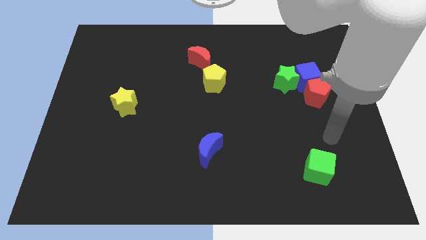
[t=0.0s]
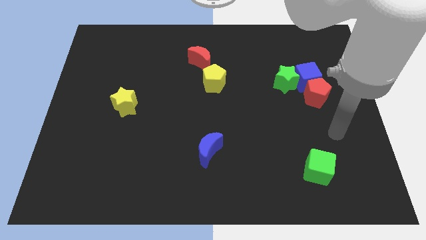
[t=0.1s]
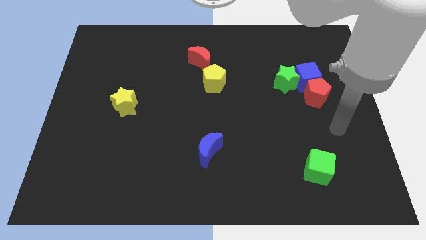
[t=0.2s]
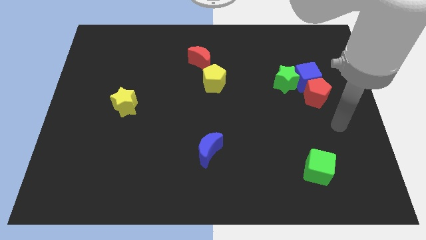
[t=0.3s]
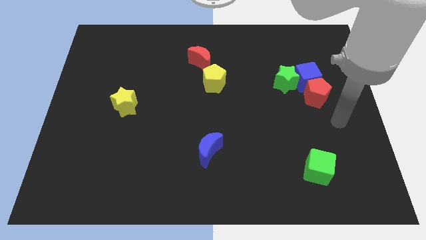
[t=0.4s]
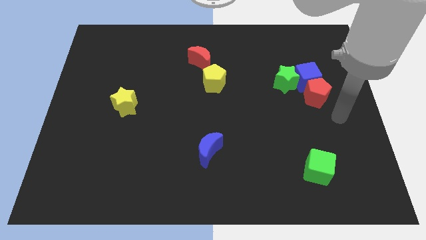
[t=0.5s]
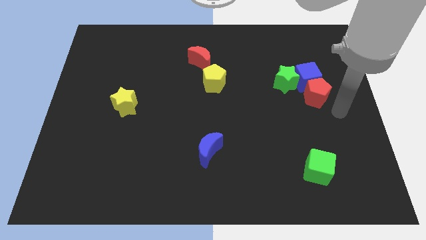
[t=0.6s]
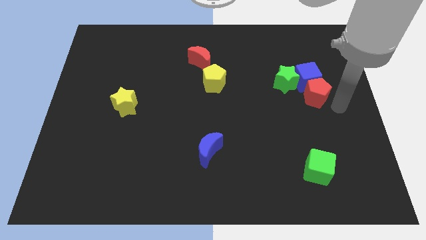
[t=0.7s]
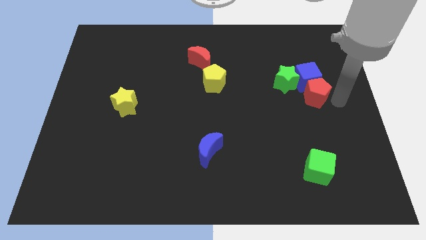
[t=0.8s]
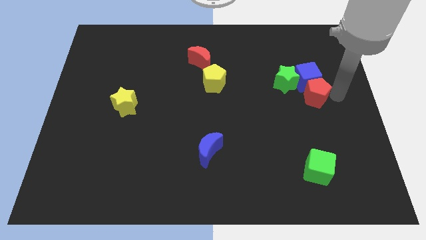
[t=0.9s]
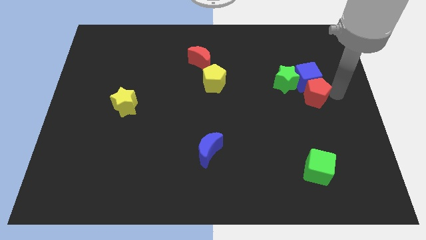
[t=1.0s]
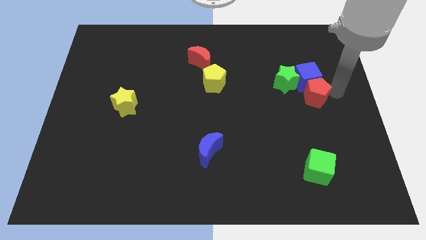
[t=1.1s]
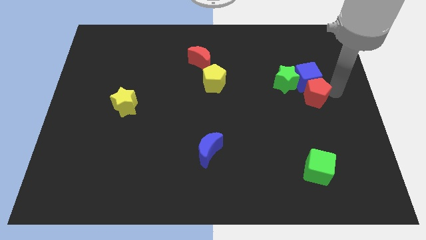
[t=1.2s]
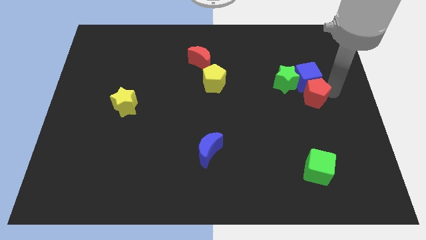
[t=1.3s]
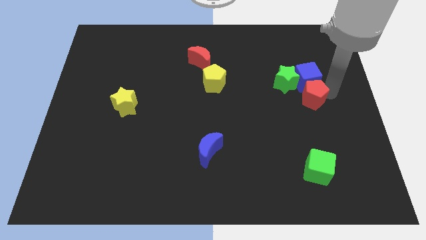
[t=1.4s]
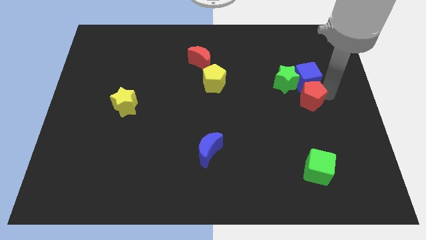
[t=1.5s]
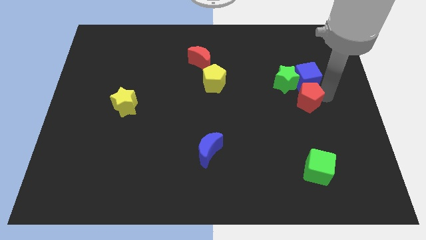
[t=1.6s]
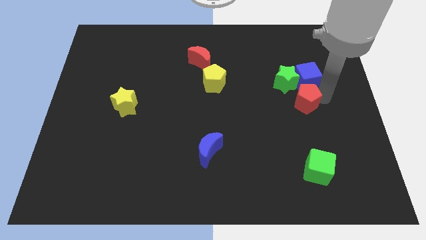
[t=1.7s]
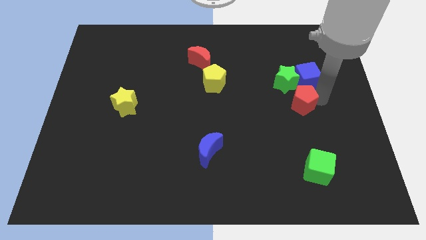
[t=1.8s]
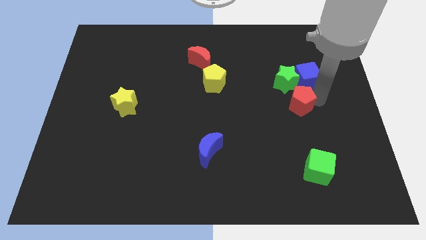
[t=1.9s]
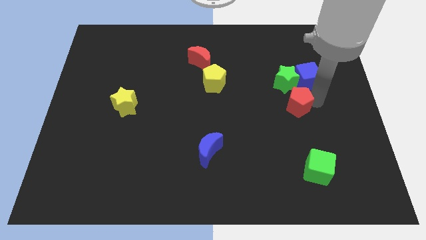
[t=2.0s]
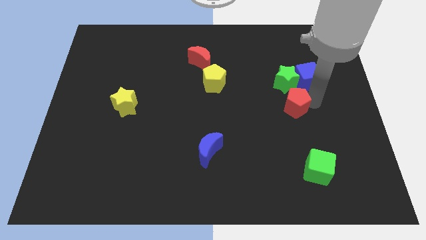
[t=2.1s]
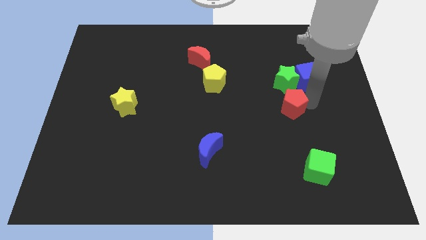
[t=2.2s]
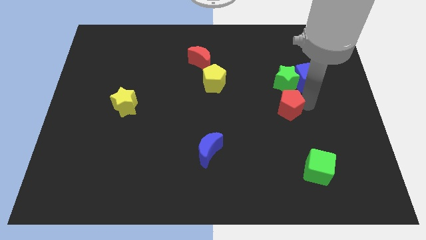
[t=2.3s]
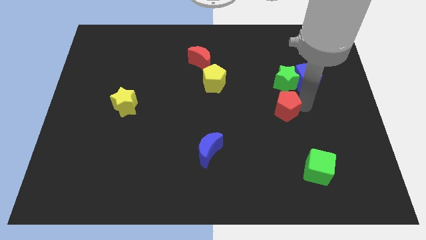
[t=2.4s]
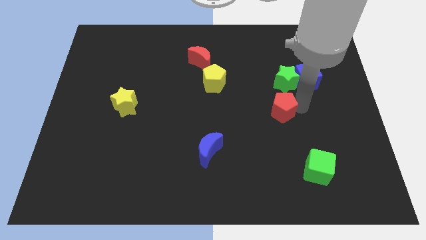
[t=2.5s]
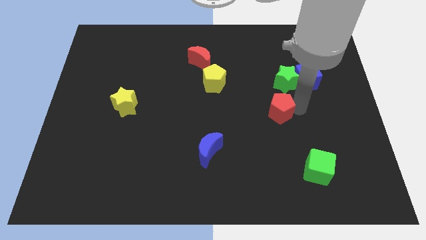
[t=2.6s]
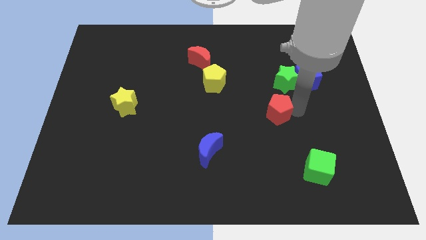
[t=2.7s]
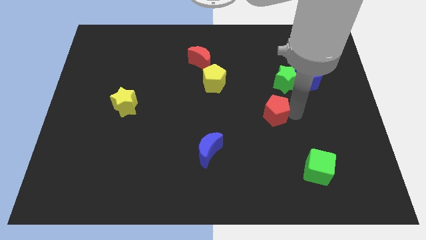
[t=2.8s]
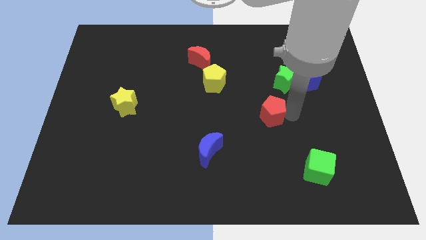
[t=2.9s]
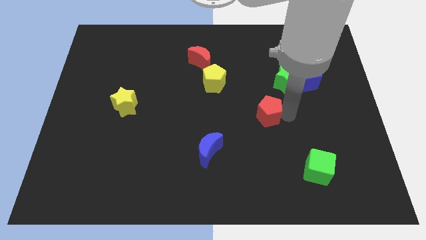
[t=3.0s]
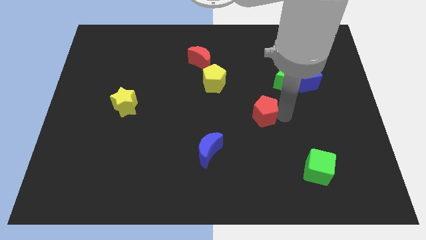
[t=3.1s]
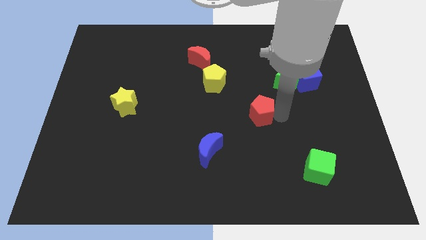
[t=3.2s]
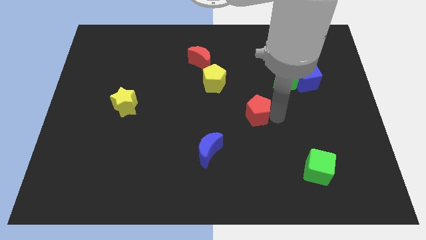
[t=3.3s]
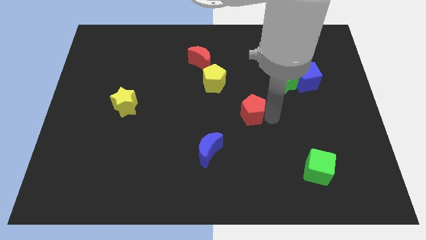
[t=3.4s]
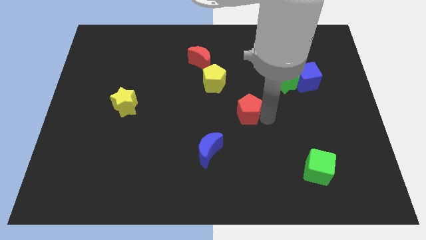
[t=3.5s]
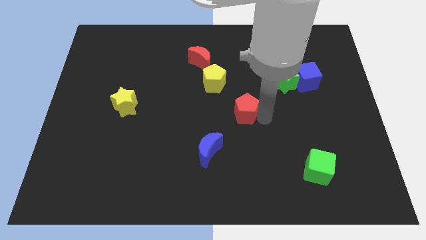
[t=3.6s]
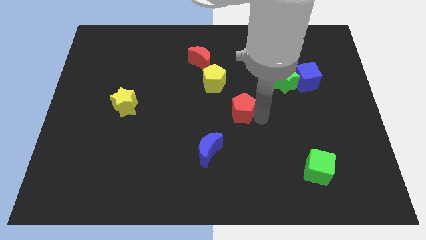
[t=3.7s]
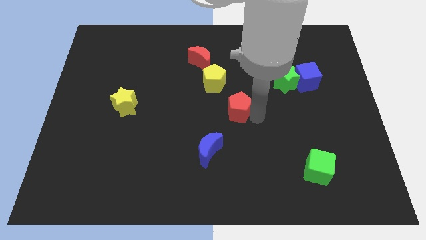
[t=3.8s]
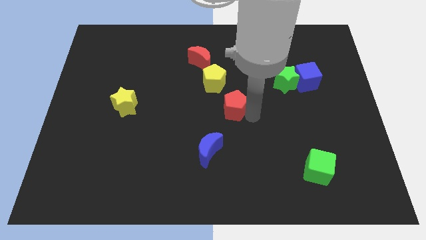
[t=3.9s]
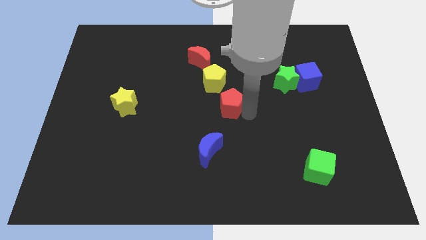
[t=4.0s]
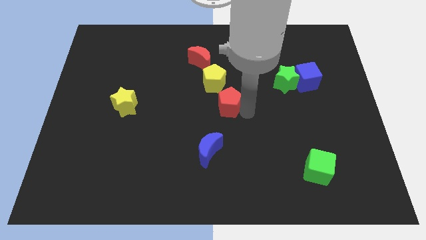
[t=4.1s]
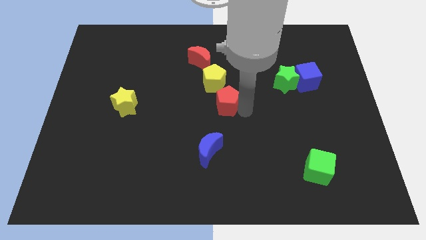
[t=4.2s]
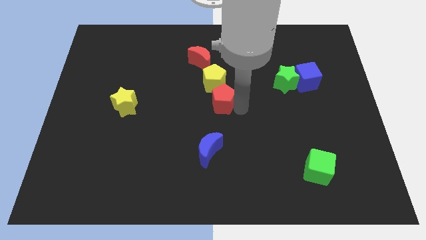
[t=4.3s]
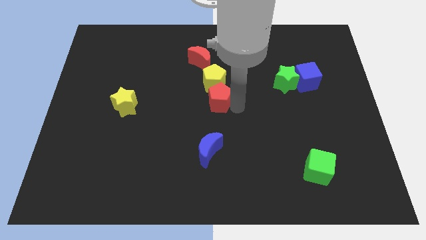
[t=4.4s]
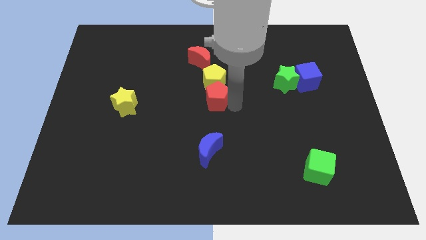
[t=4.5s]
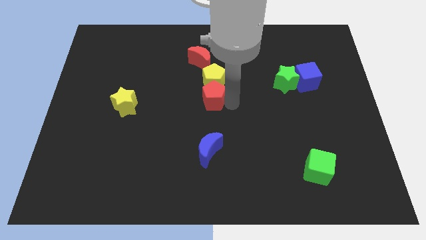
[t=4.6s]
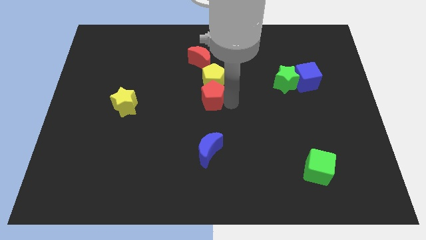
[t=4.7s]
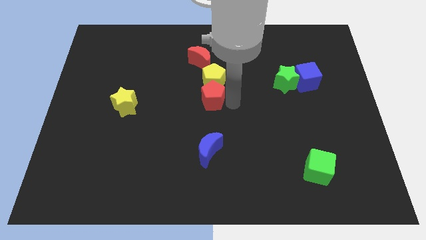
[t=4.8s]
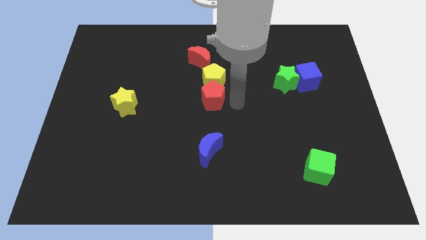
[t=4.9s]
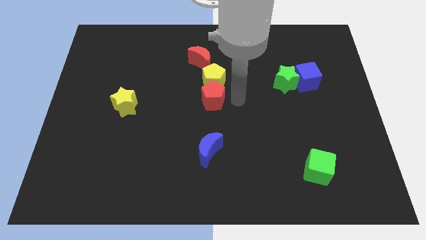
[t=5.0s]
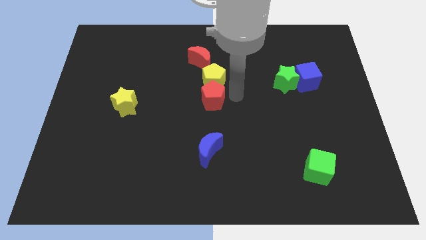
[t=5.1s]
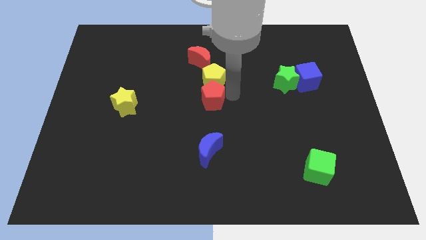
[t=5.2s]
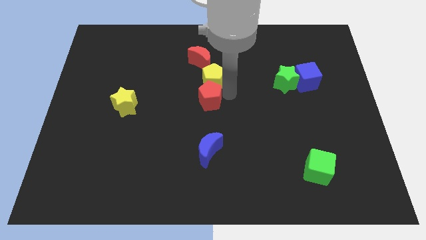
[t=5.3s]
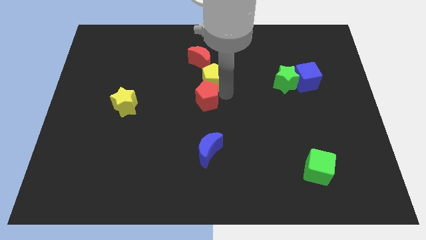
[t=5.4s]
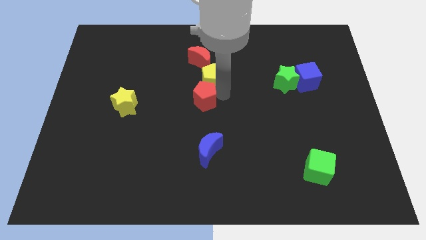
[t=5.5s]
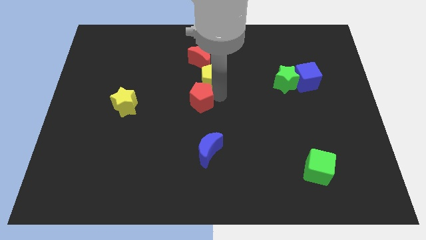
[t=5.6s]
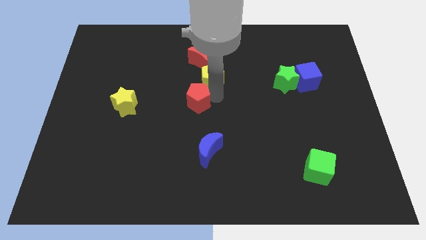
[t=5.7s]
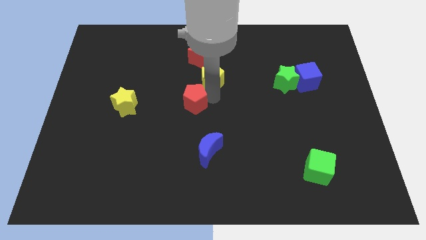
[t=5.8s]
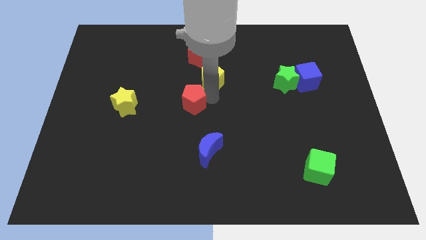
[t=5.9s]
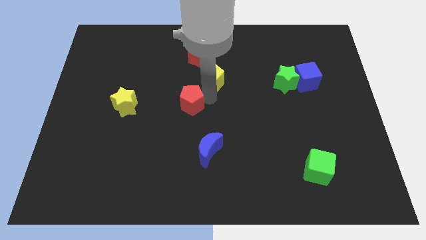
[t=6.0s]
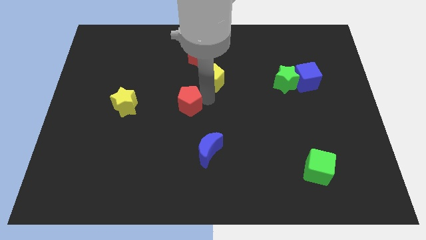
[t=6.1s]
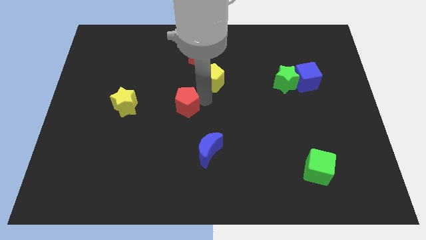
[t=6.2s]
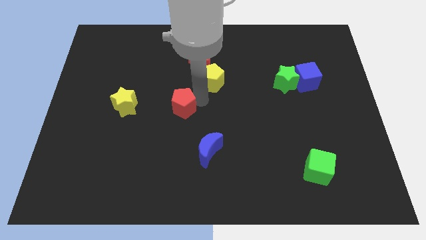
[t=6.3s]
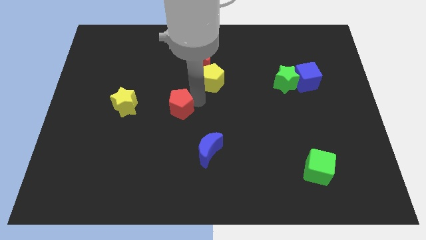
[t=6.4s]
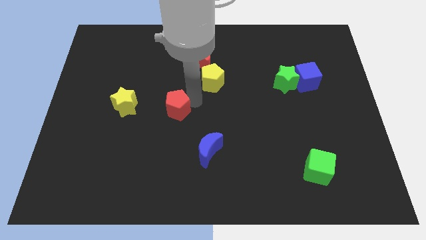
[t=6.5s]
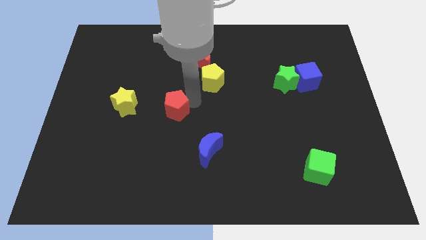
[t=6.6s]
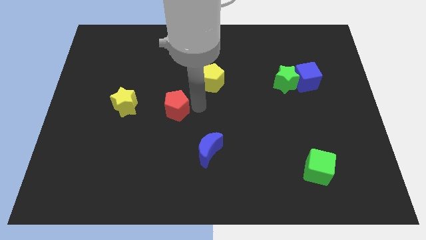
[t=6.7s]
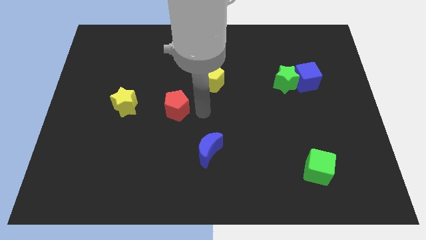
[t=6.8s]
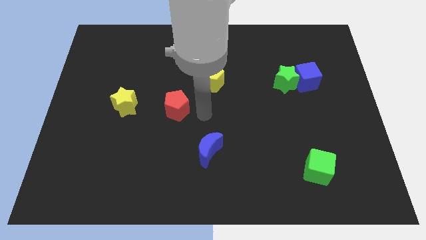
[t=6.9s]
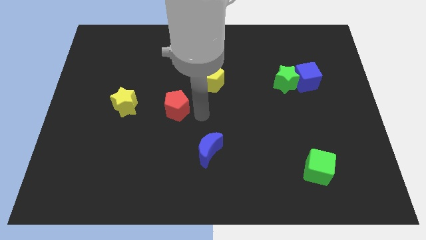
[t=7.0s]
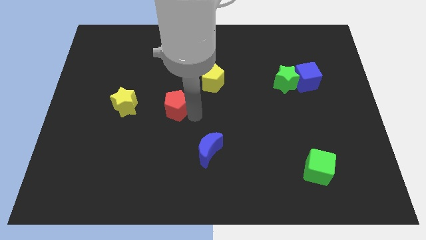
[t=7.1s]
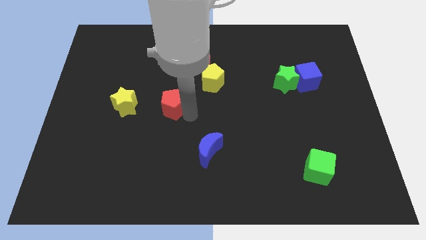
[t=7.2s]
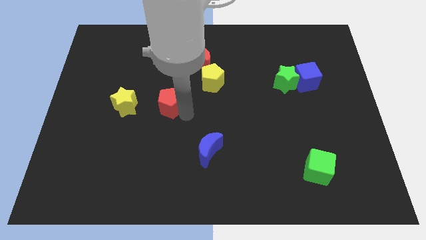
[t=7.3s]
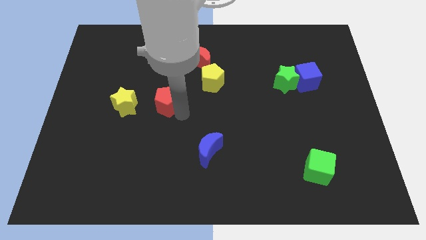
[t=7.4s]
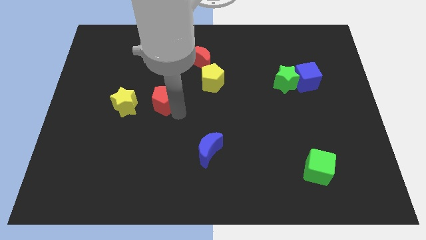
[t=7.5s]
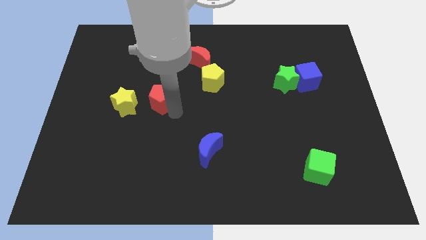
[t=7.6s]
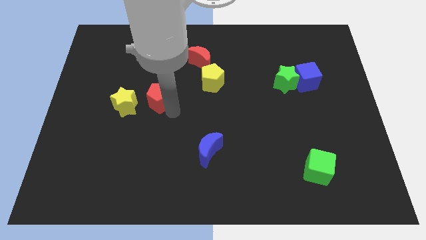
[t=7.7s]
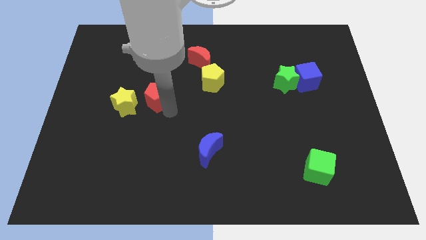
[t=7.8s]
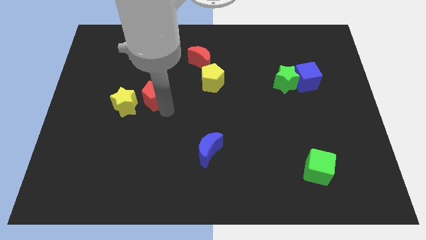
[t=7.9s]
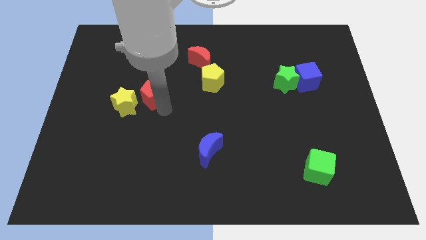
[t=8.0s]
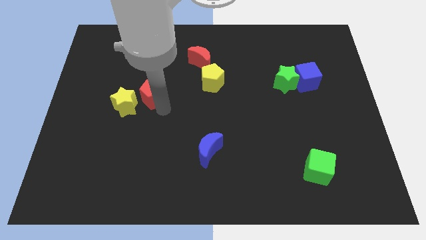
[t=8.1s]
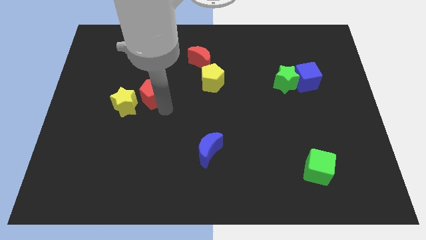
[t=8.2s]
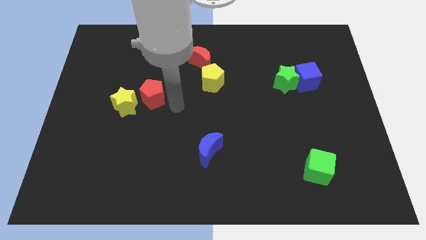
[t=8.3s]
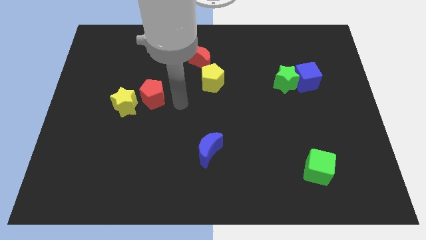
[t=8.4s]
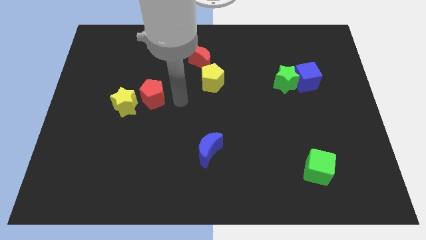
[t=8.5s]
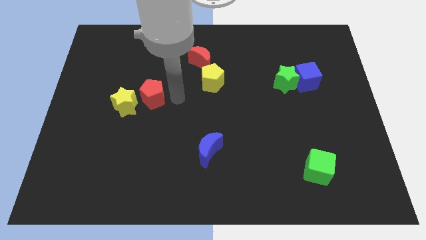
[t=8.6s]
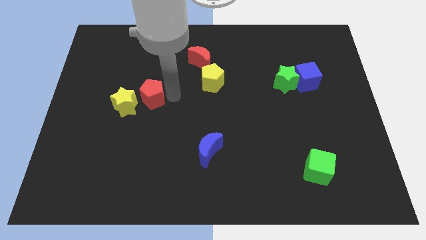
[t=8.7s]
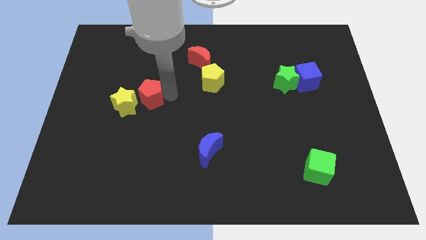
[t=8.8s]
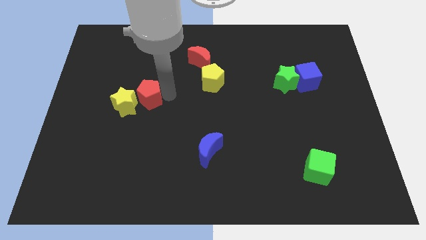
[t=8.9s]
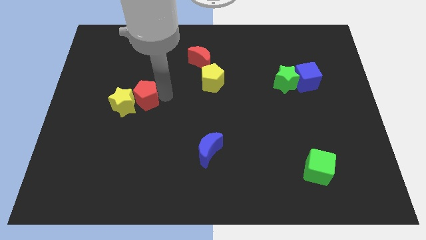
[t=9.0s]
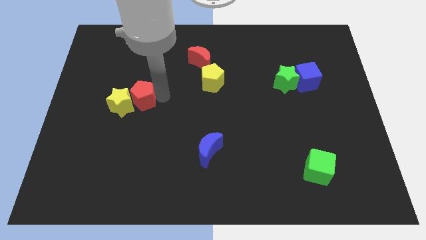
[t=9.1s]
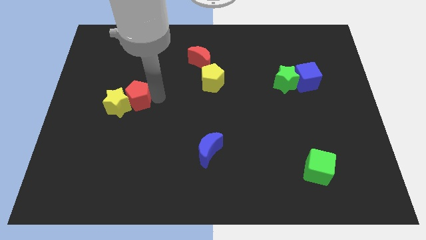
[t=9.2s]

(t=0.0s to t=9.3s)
slide the red pentagon next to the yellow star
